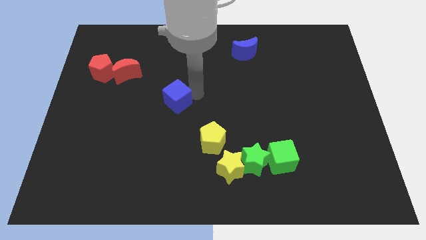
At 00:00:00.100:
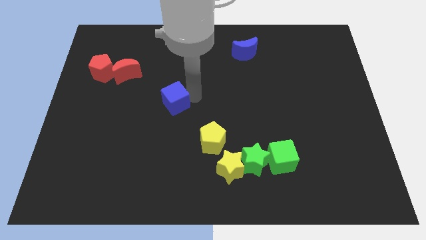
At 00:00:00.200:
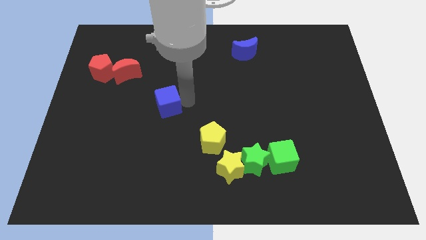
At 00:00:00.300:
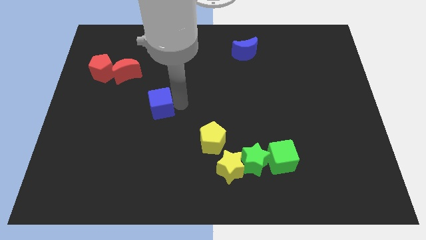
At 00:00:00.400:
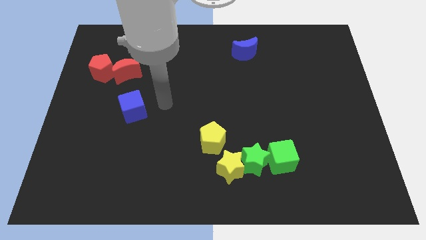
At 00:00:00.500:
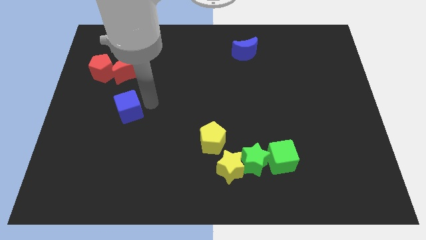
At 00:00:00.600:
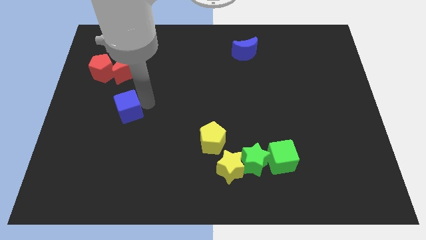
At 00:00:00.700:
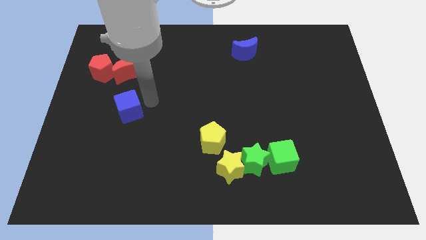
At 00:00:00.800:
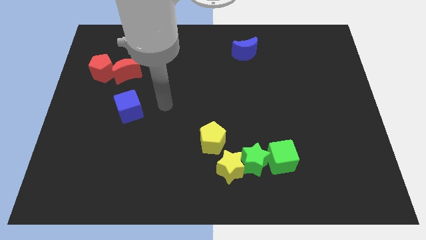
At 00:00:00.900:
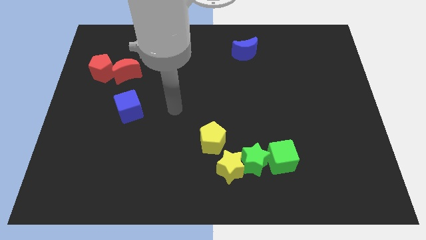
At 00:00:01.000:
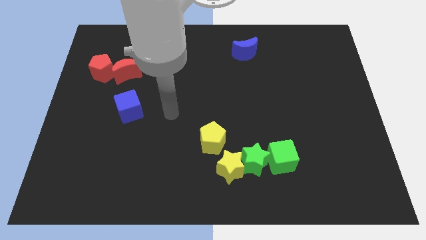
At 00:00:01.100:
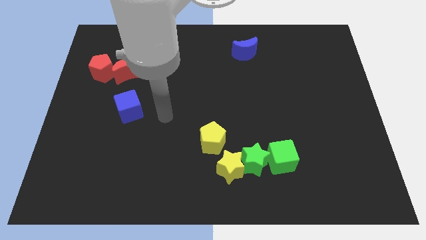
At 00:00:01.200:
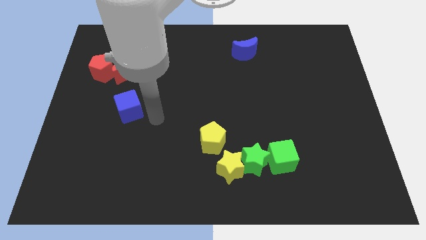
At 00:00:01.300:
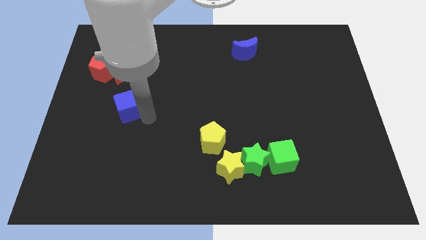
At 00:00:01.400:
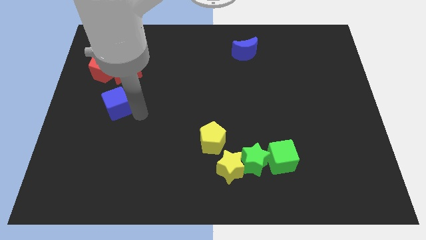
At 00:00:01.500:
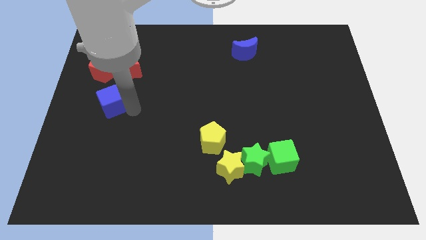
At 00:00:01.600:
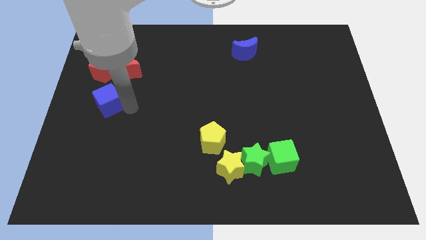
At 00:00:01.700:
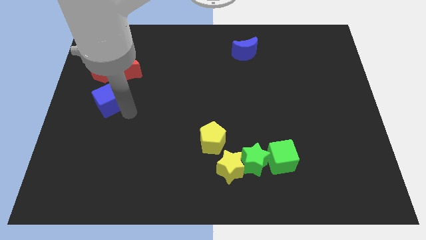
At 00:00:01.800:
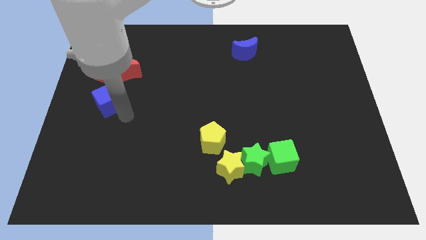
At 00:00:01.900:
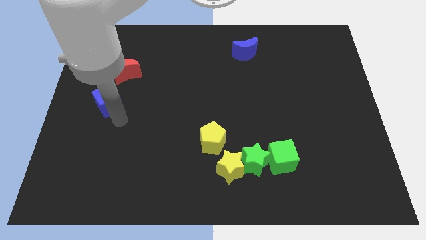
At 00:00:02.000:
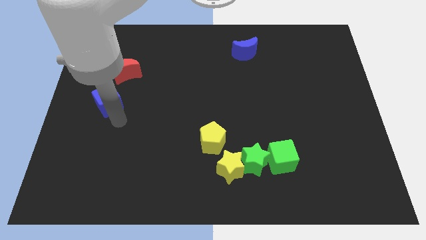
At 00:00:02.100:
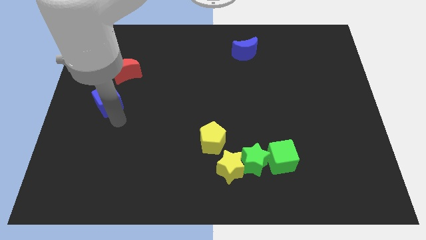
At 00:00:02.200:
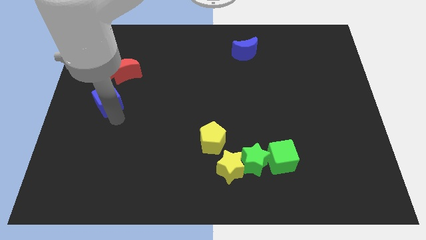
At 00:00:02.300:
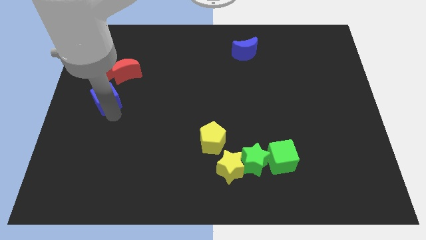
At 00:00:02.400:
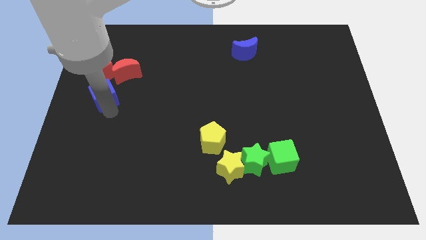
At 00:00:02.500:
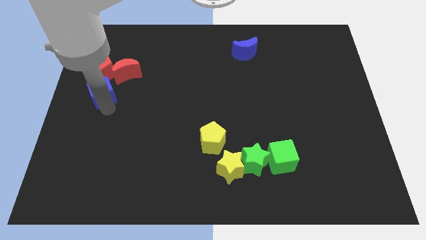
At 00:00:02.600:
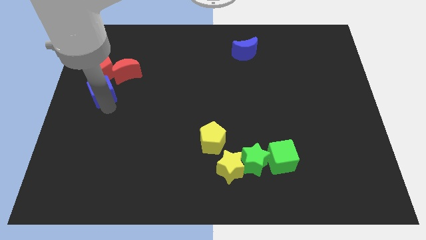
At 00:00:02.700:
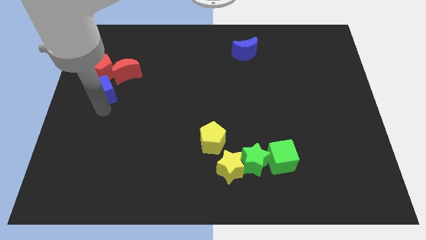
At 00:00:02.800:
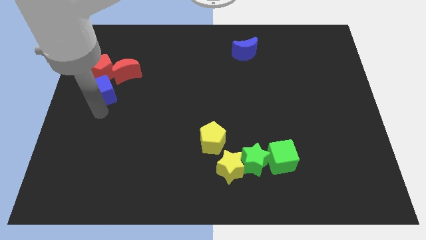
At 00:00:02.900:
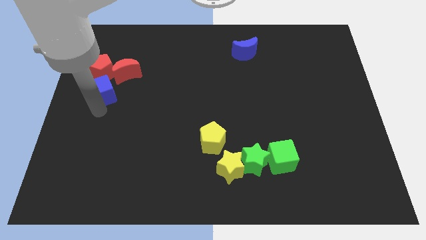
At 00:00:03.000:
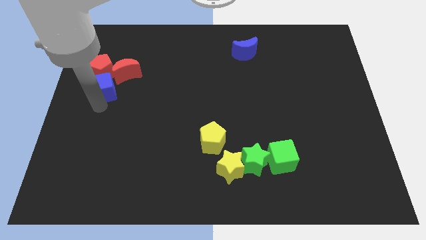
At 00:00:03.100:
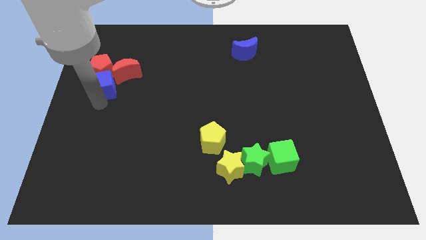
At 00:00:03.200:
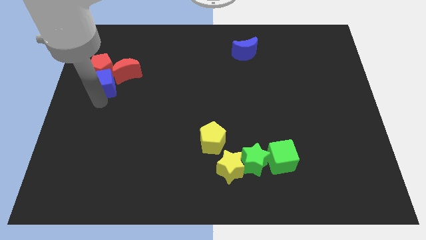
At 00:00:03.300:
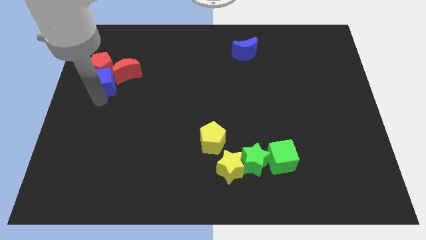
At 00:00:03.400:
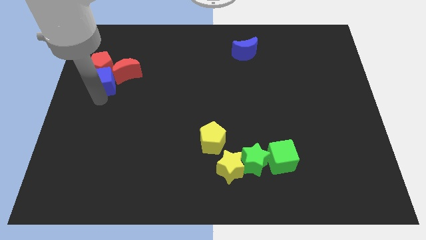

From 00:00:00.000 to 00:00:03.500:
push the blue cube into the red blocks

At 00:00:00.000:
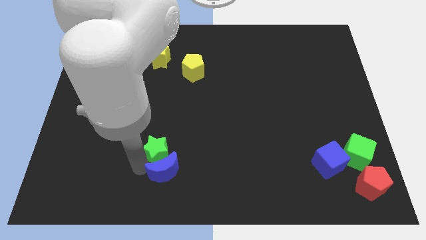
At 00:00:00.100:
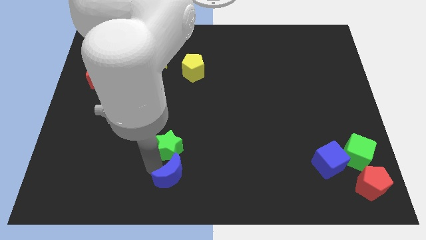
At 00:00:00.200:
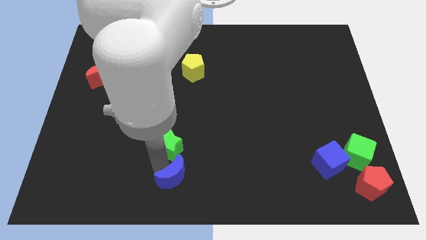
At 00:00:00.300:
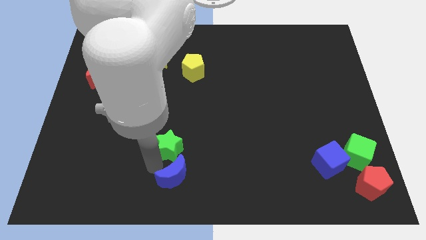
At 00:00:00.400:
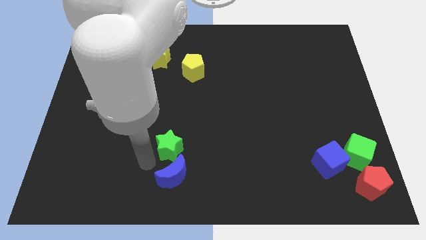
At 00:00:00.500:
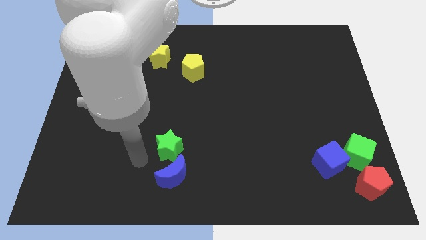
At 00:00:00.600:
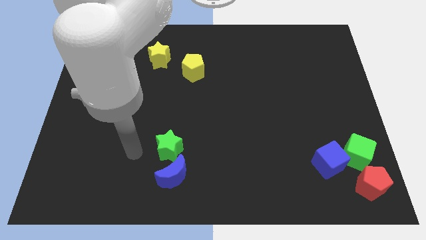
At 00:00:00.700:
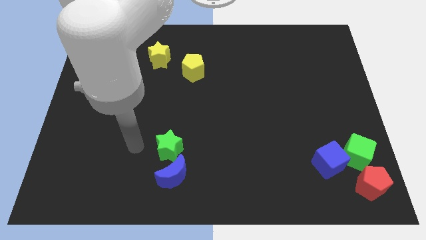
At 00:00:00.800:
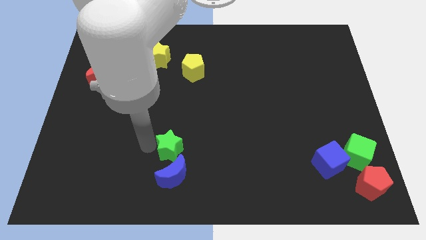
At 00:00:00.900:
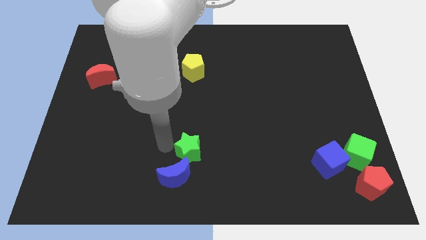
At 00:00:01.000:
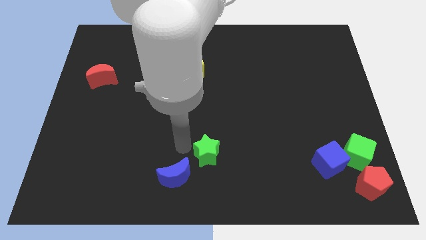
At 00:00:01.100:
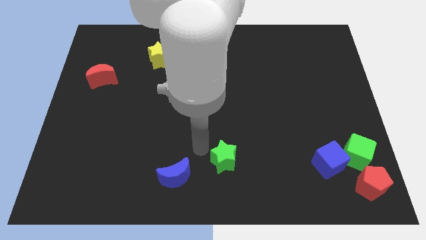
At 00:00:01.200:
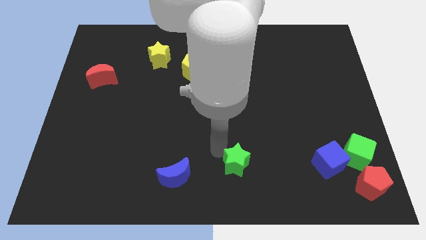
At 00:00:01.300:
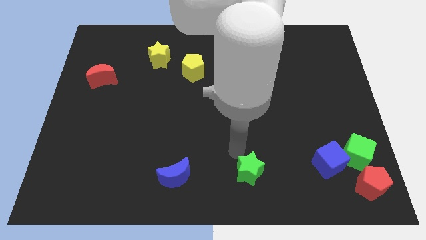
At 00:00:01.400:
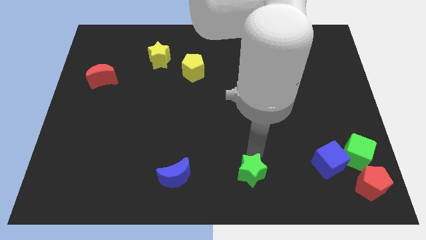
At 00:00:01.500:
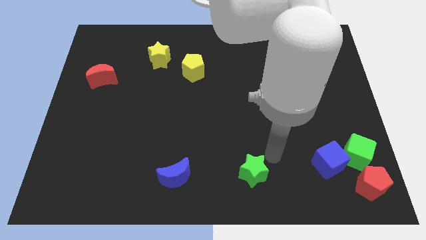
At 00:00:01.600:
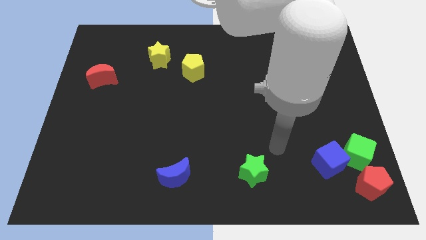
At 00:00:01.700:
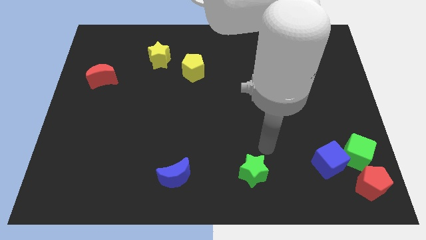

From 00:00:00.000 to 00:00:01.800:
put the green star in between the blue crescent and the blue cube

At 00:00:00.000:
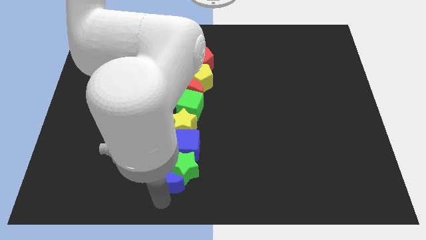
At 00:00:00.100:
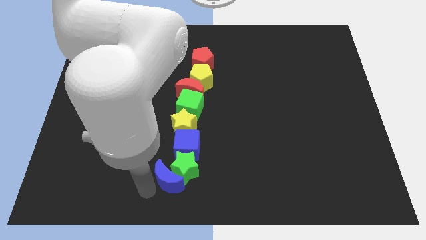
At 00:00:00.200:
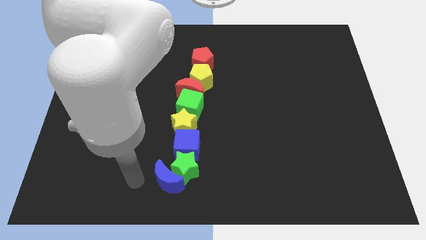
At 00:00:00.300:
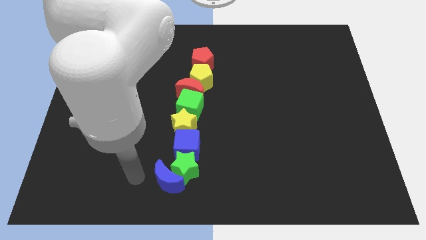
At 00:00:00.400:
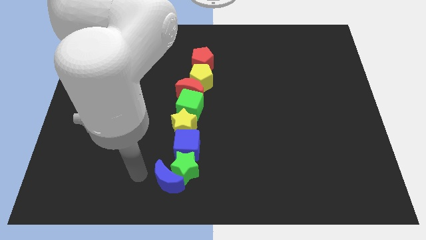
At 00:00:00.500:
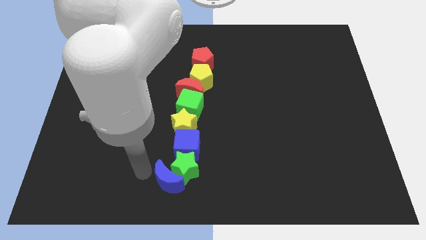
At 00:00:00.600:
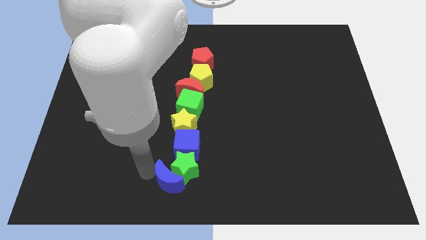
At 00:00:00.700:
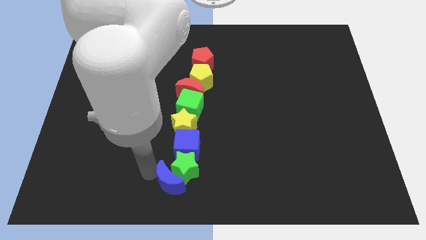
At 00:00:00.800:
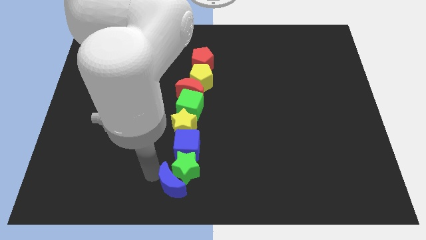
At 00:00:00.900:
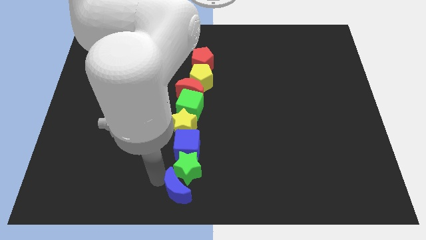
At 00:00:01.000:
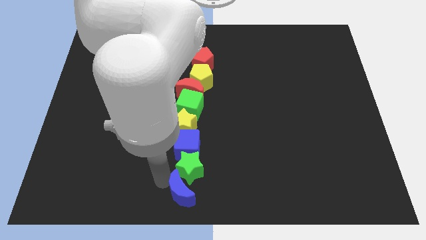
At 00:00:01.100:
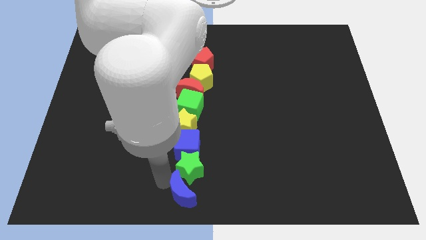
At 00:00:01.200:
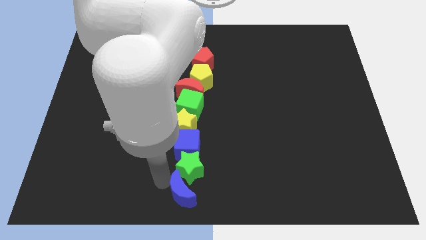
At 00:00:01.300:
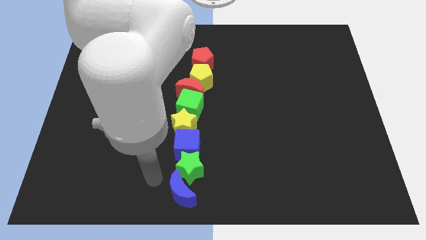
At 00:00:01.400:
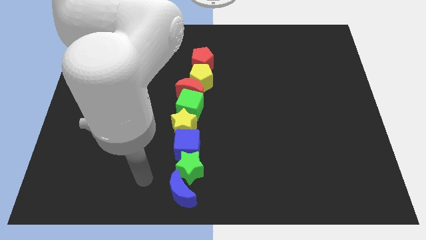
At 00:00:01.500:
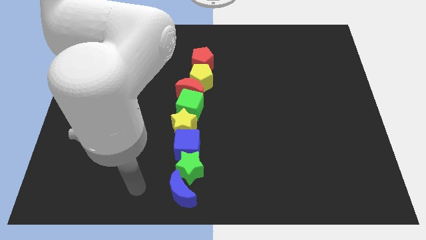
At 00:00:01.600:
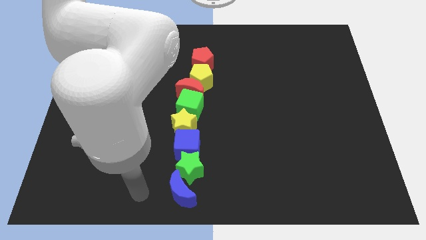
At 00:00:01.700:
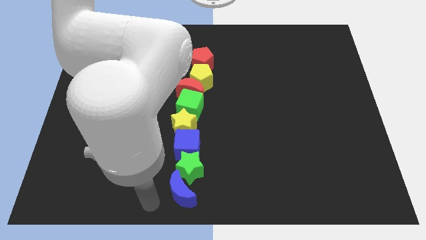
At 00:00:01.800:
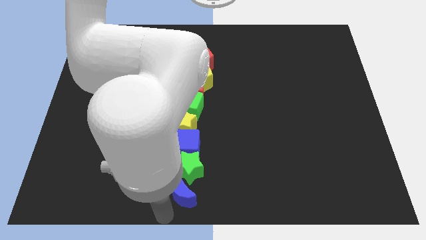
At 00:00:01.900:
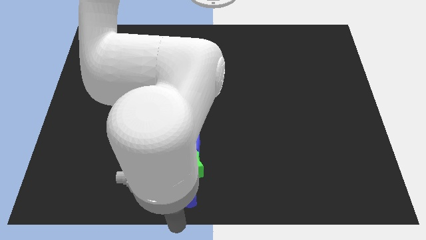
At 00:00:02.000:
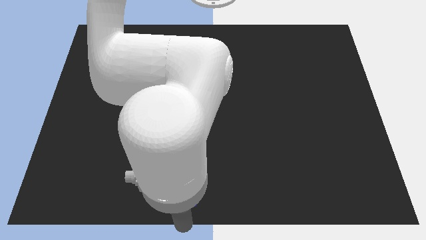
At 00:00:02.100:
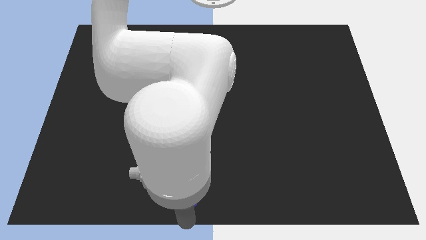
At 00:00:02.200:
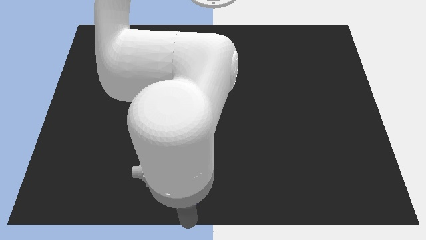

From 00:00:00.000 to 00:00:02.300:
put the blue crescent in line with the other blocks

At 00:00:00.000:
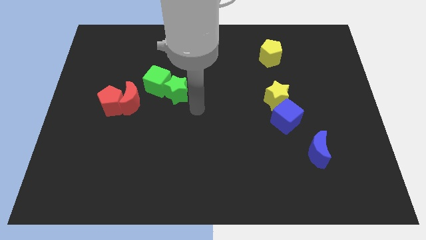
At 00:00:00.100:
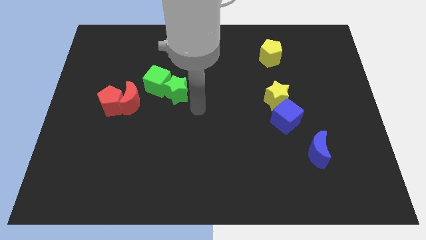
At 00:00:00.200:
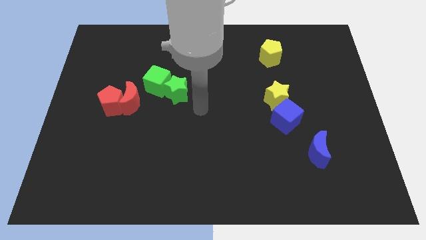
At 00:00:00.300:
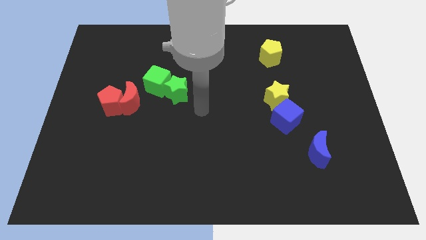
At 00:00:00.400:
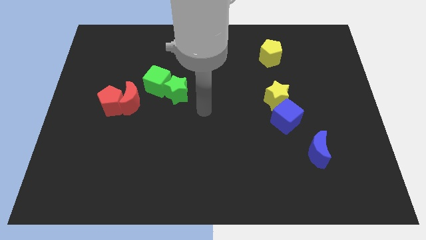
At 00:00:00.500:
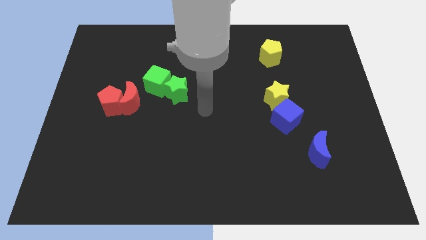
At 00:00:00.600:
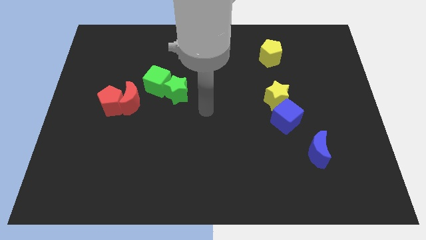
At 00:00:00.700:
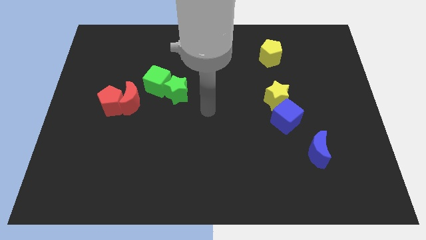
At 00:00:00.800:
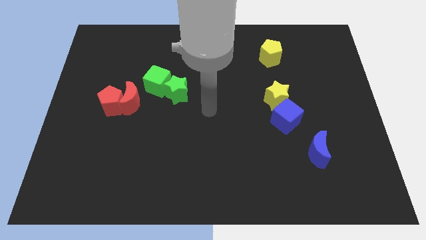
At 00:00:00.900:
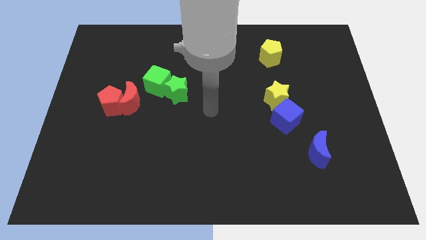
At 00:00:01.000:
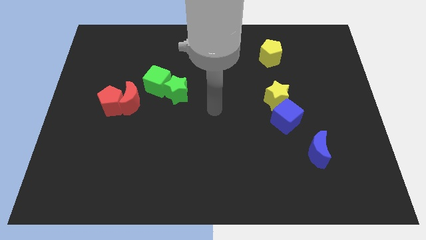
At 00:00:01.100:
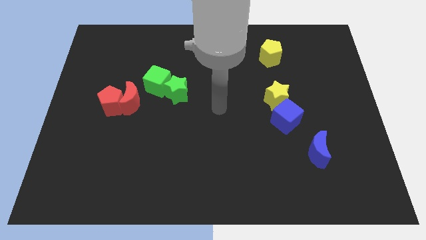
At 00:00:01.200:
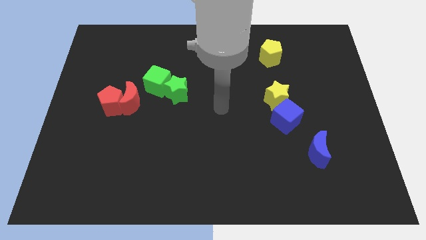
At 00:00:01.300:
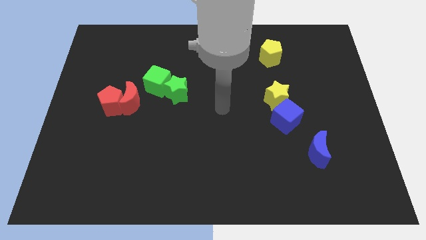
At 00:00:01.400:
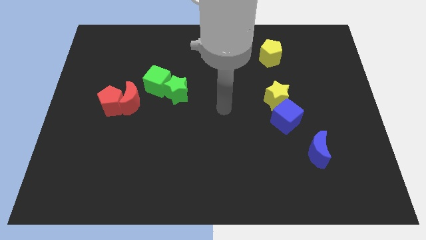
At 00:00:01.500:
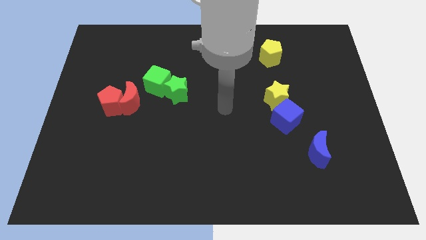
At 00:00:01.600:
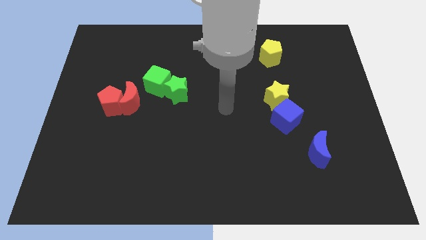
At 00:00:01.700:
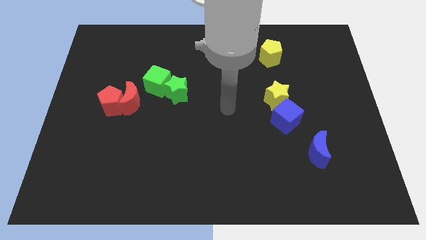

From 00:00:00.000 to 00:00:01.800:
move your hand away from the right side of the green star
